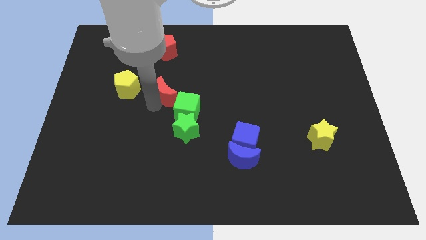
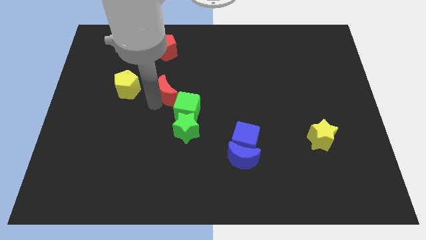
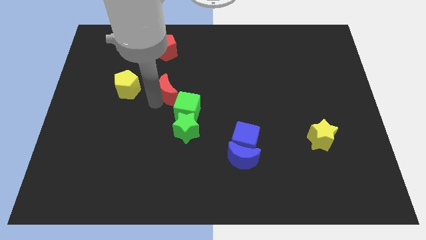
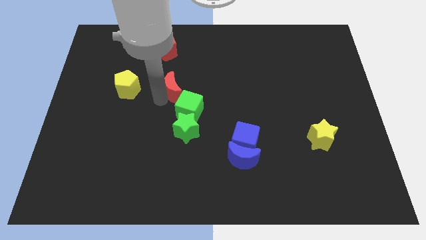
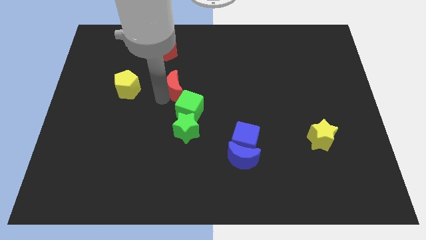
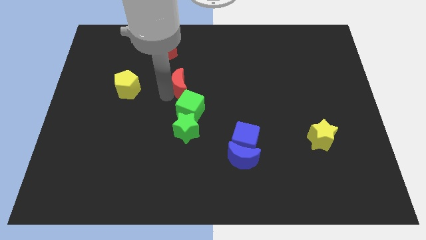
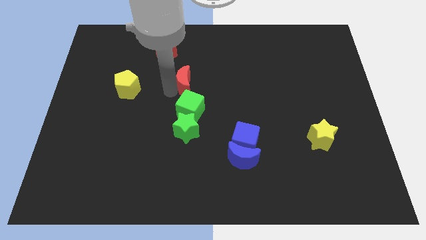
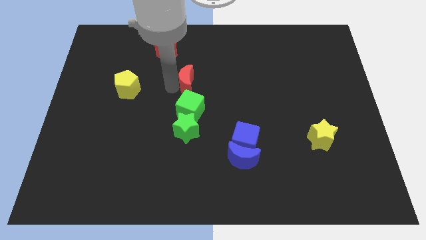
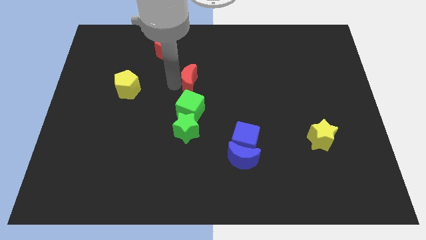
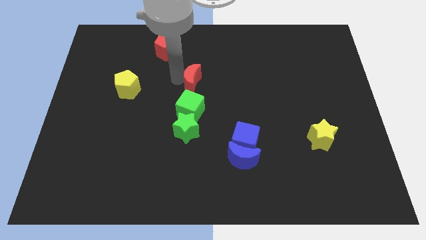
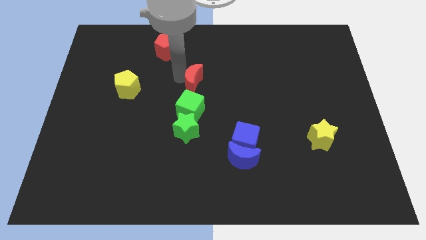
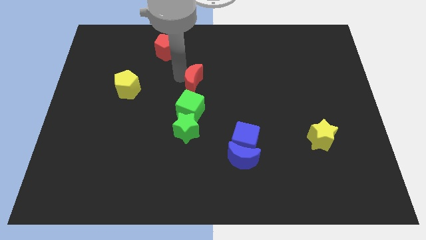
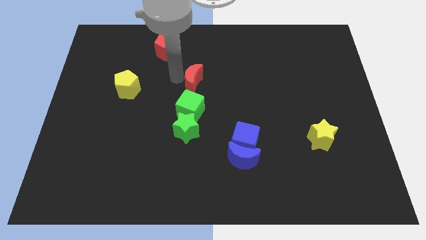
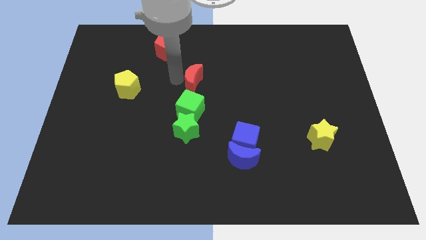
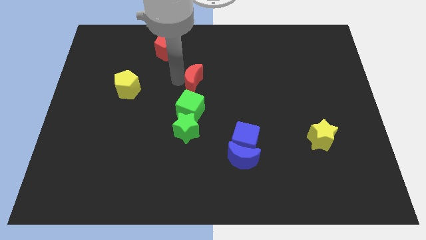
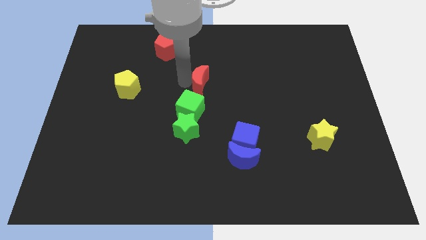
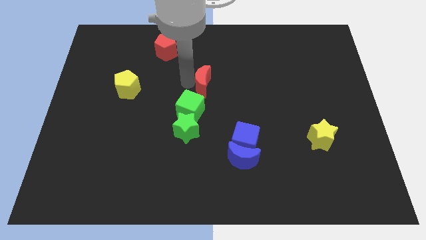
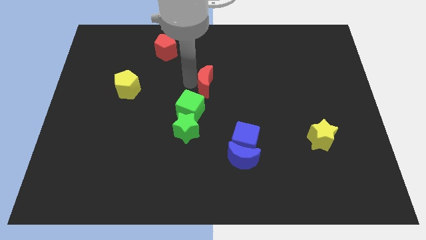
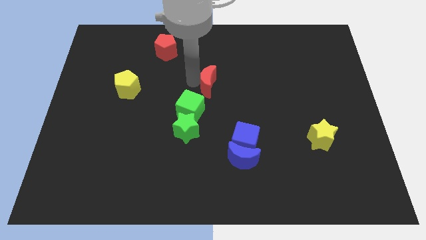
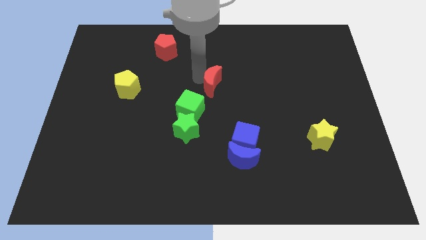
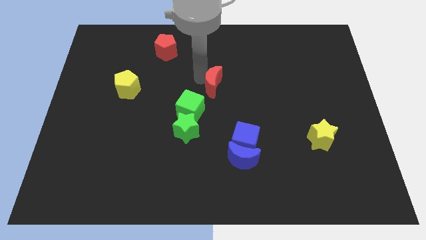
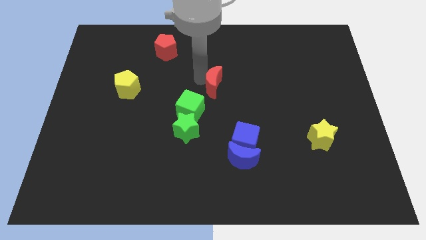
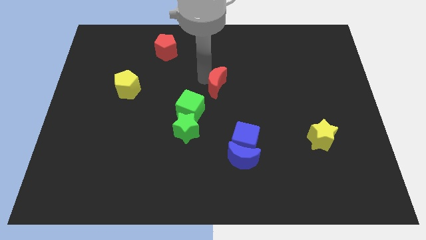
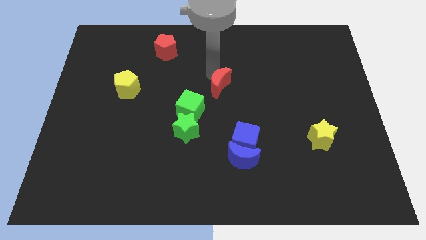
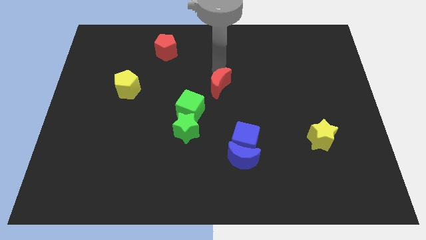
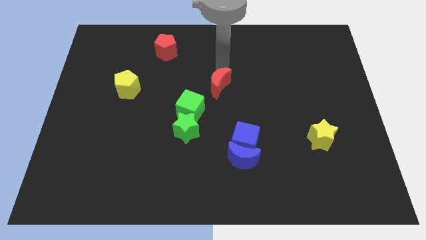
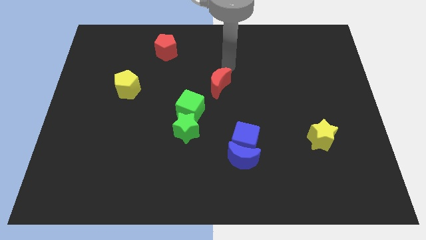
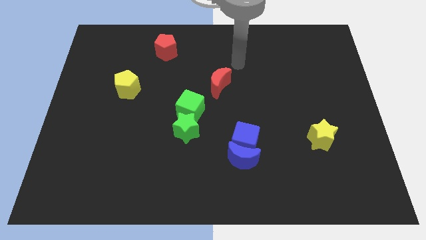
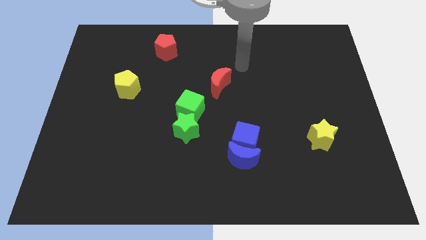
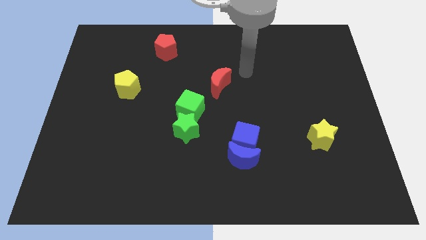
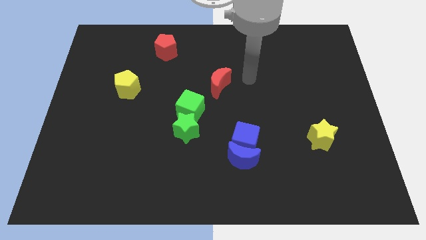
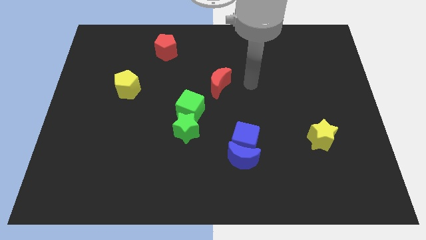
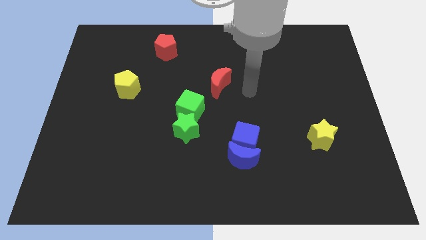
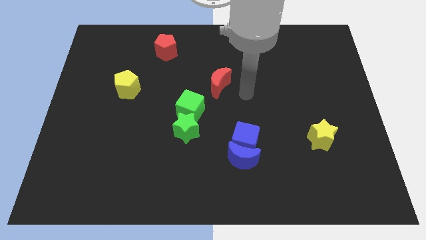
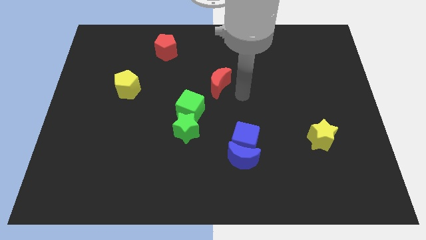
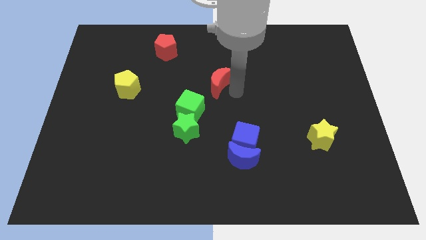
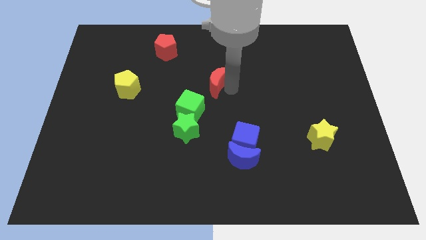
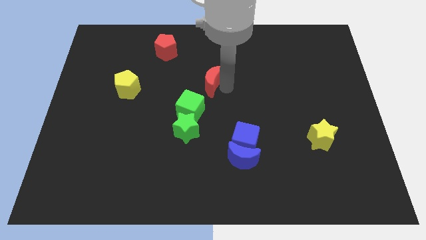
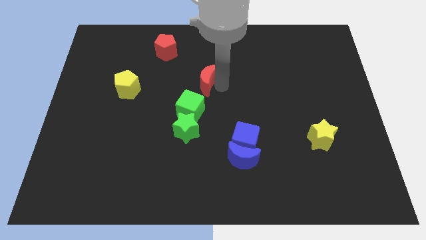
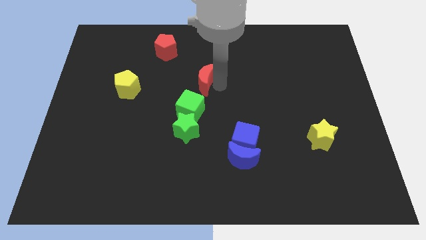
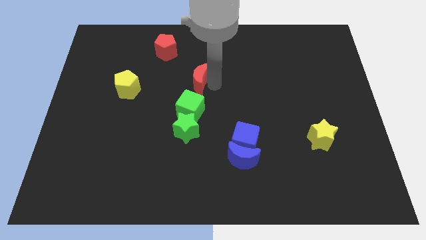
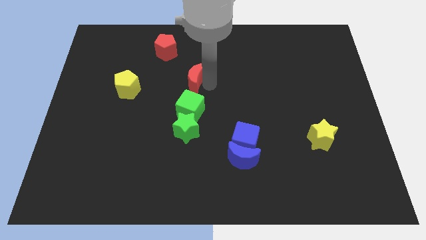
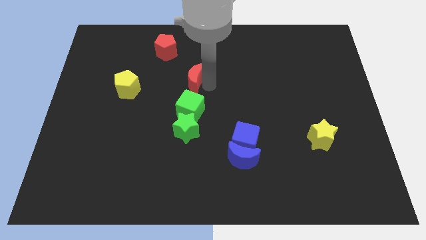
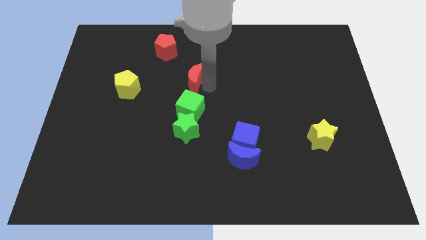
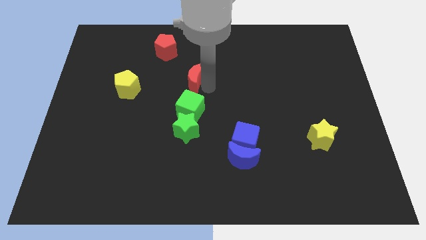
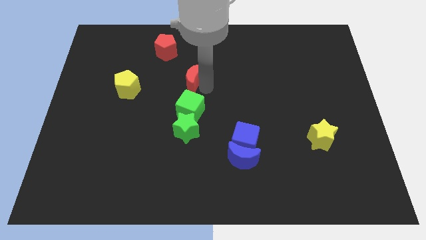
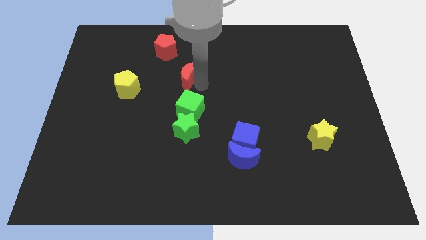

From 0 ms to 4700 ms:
place the red crescent above the green cube

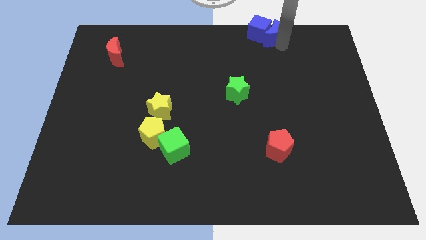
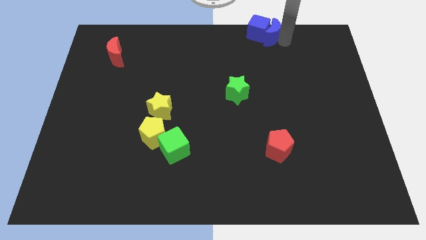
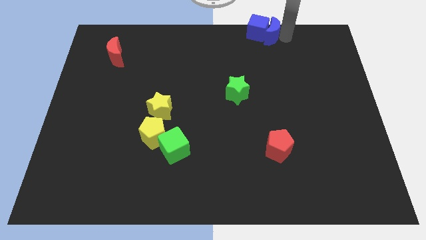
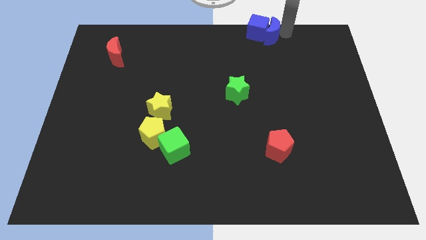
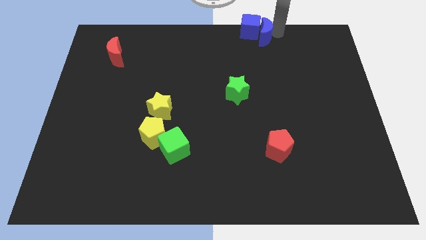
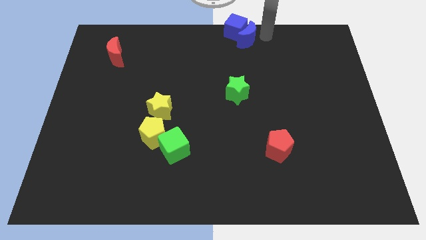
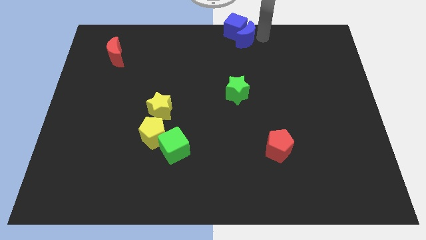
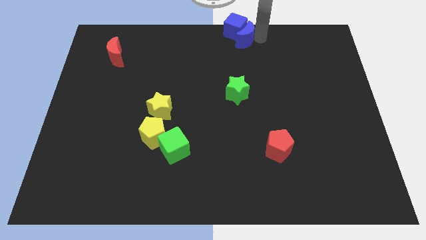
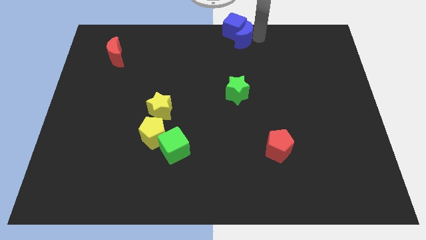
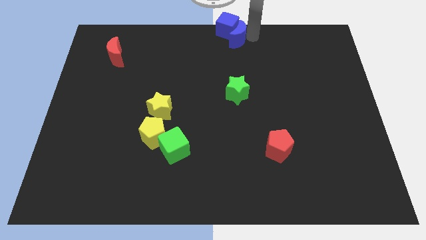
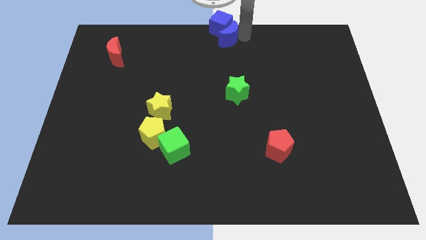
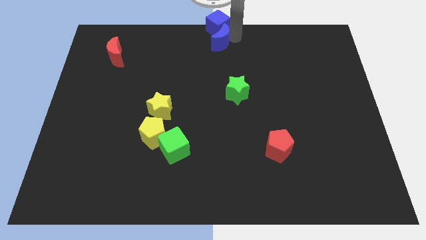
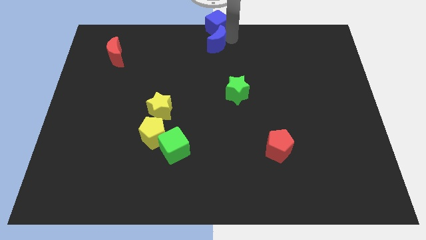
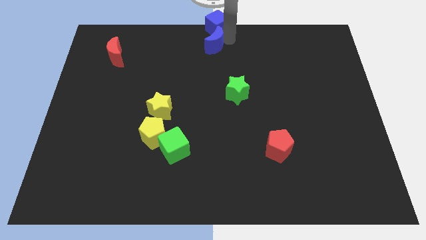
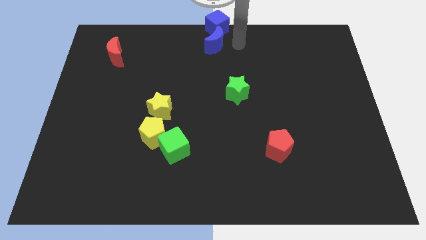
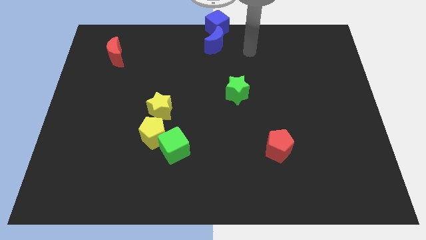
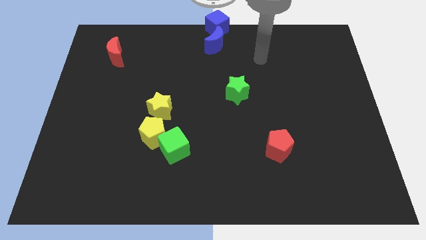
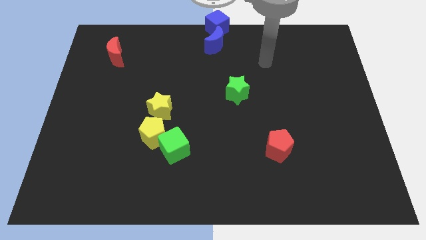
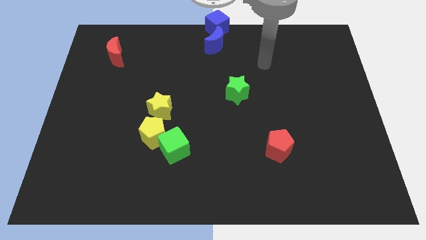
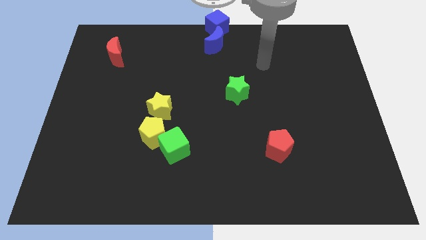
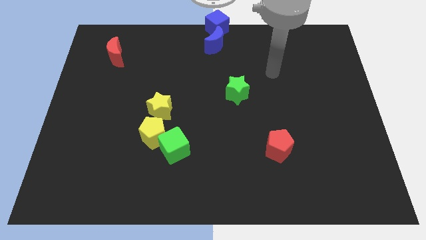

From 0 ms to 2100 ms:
move blue moon along with blue cube to the center top

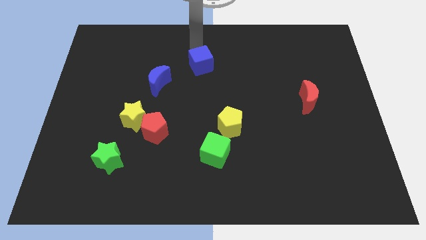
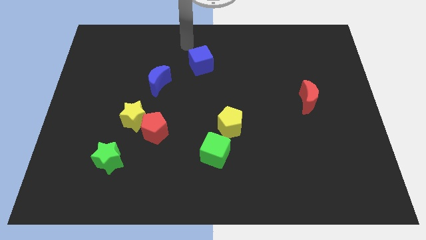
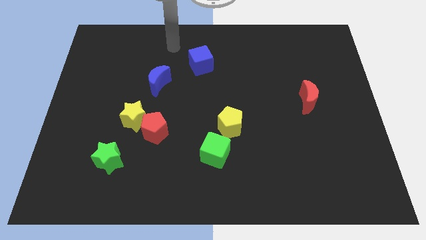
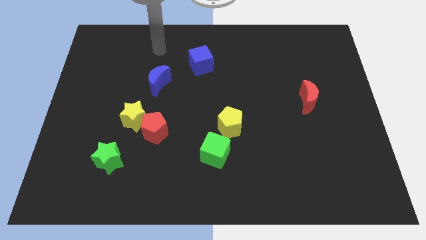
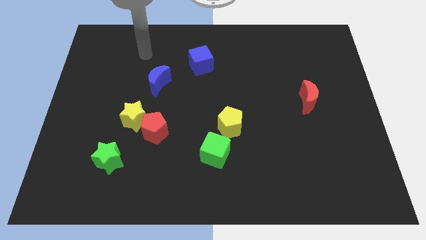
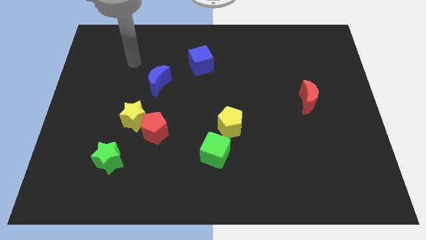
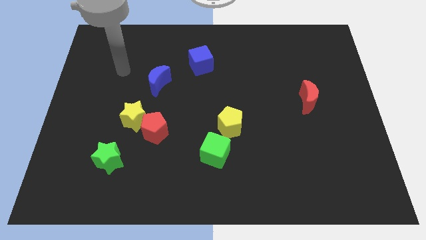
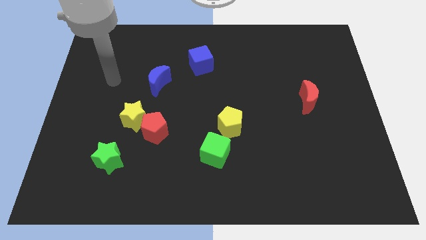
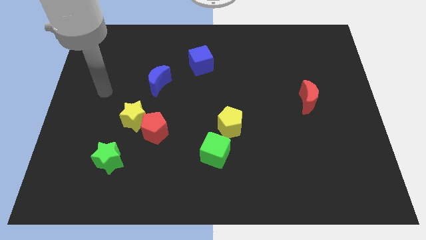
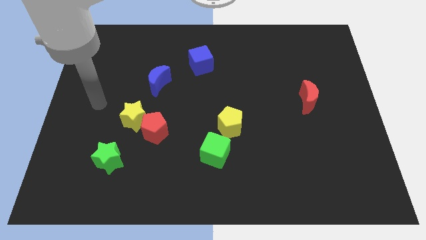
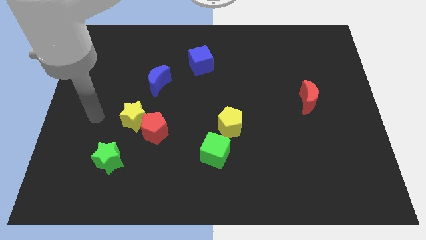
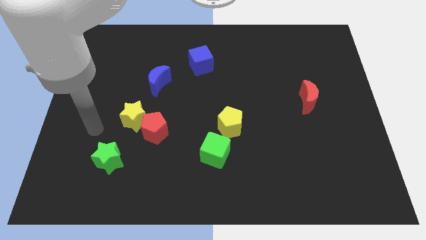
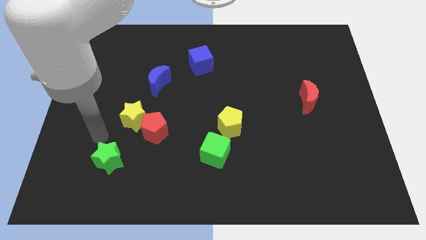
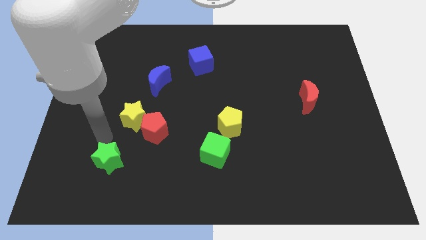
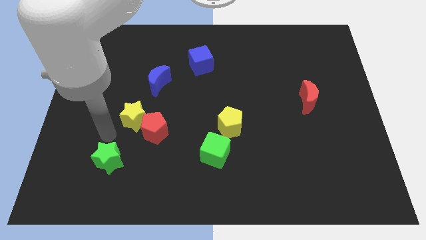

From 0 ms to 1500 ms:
place your arm to the top of green star

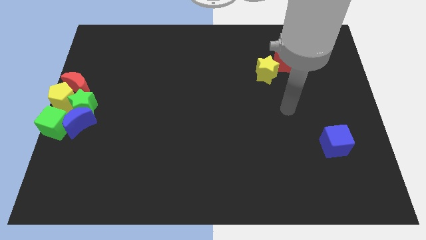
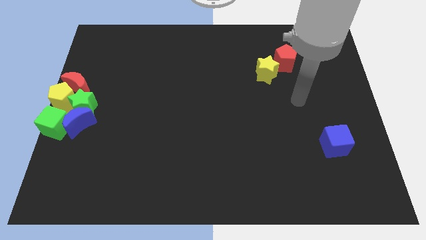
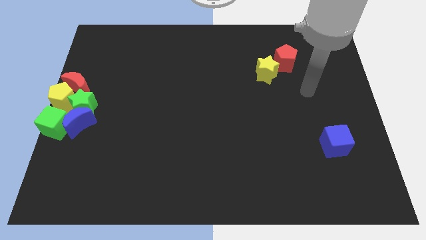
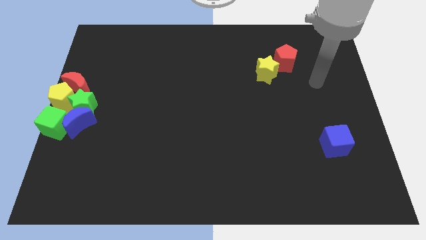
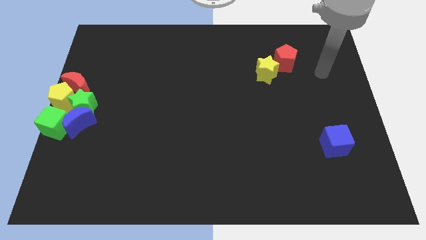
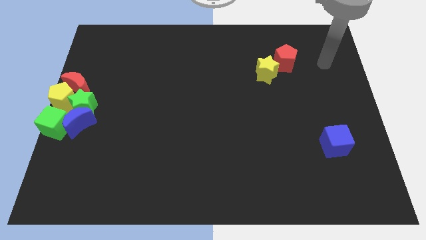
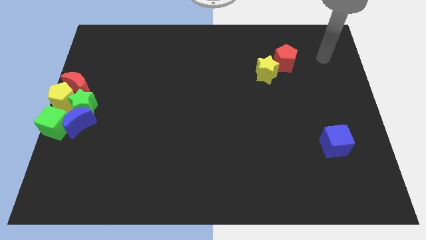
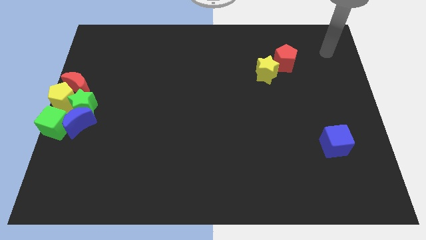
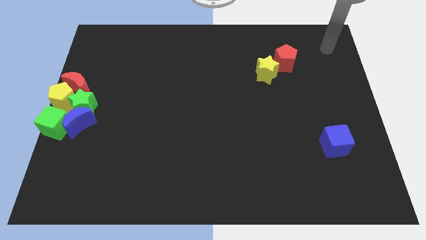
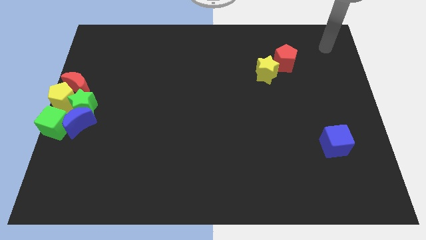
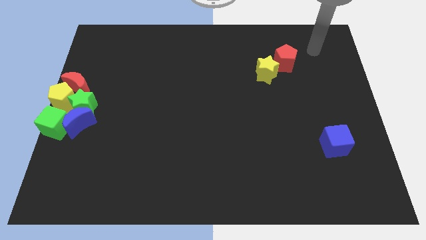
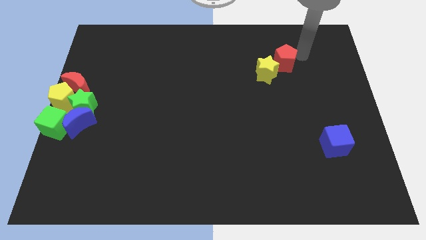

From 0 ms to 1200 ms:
place your arm to the right of red pentagon
